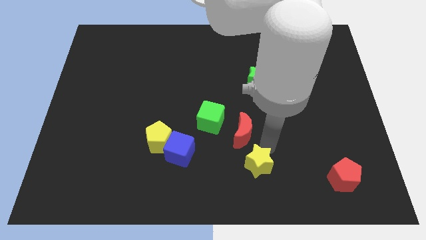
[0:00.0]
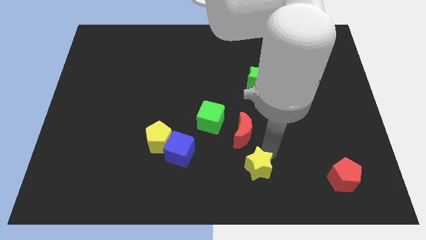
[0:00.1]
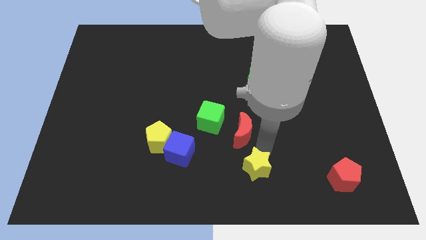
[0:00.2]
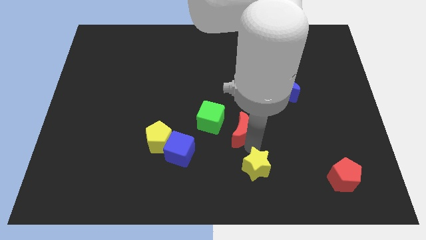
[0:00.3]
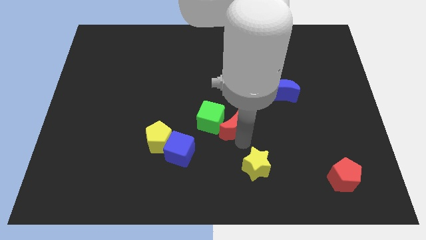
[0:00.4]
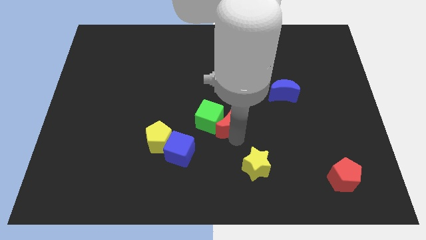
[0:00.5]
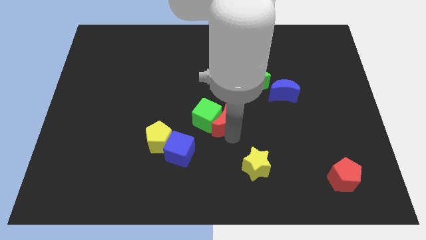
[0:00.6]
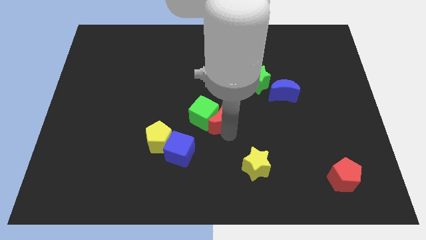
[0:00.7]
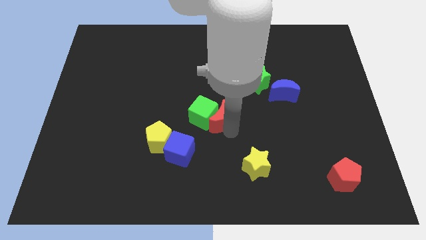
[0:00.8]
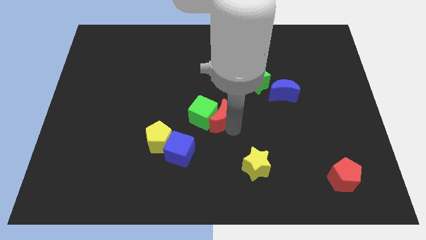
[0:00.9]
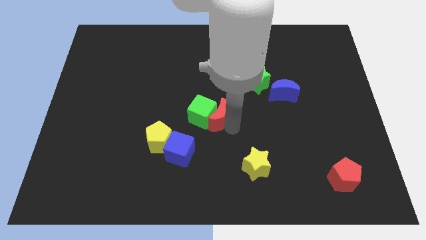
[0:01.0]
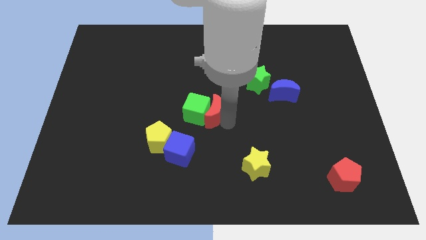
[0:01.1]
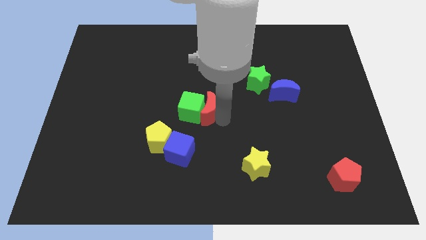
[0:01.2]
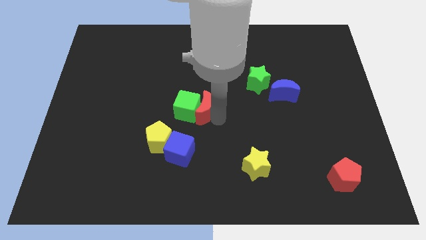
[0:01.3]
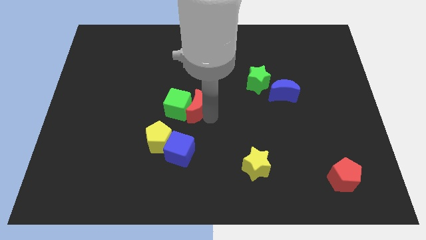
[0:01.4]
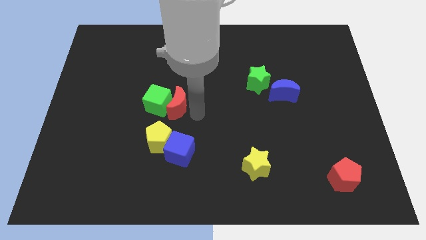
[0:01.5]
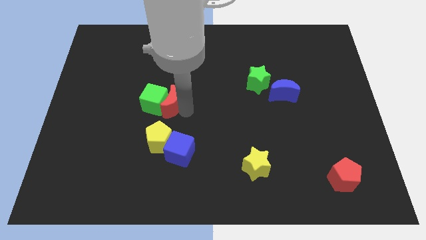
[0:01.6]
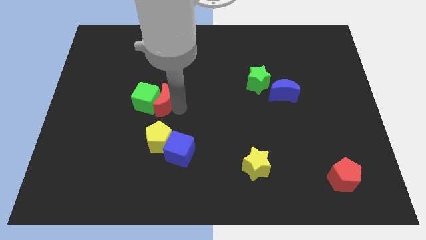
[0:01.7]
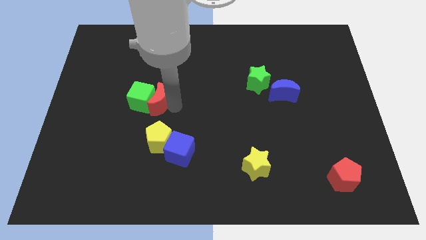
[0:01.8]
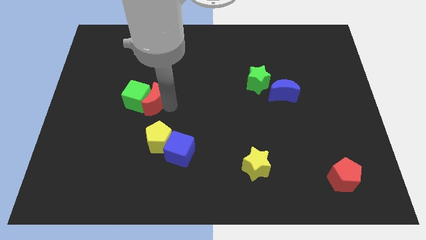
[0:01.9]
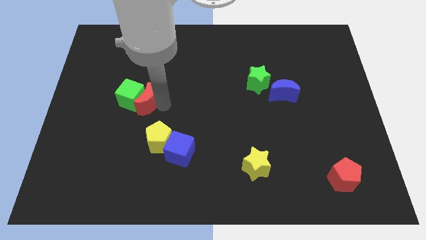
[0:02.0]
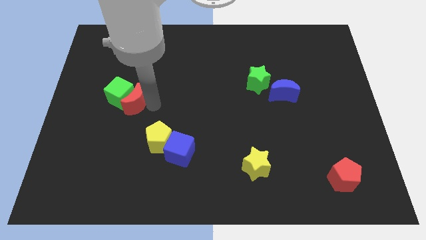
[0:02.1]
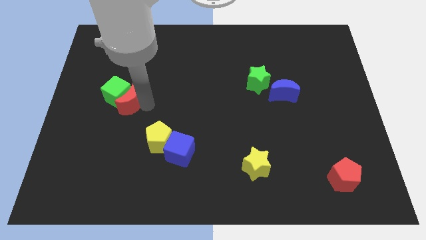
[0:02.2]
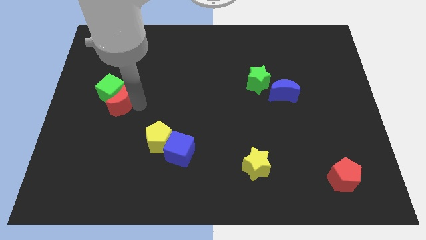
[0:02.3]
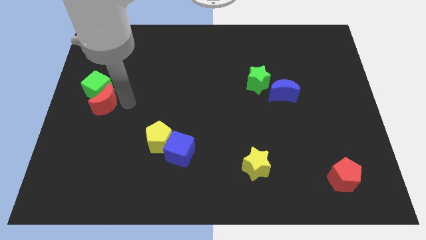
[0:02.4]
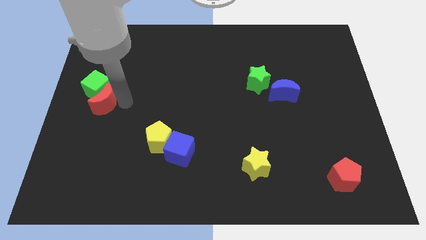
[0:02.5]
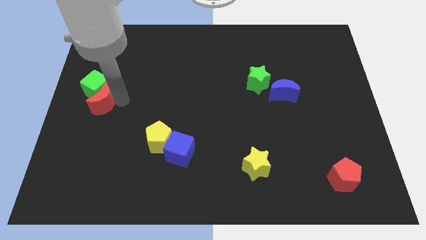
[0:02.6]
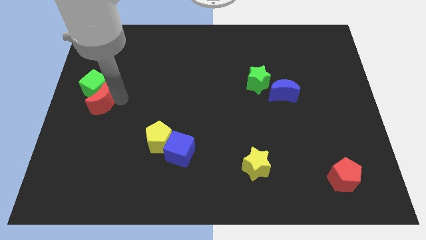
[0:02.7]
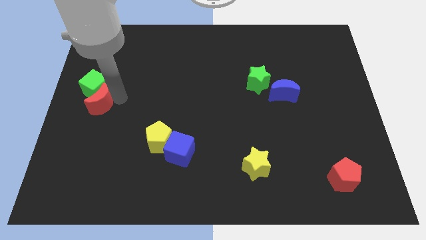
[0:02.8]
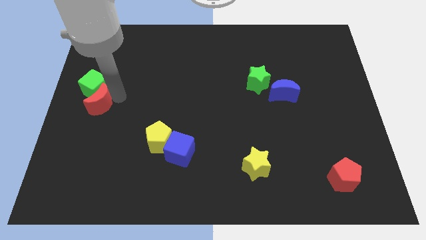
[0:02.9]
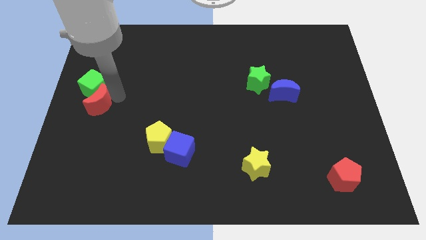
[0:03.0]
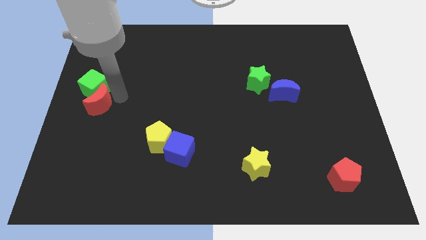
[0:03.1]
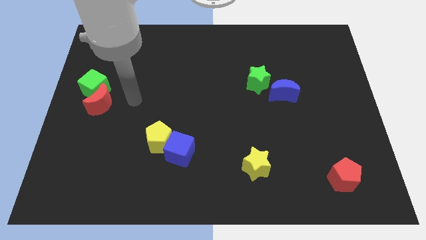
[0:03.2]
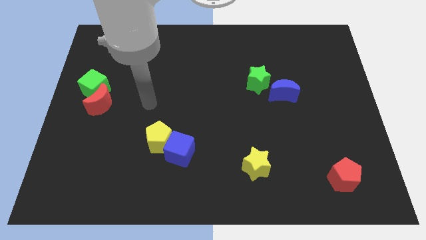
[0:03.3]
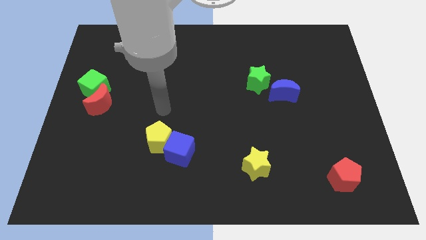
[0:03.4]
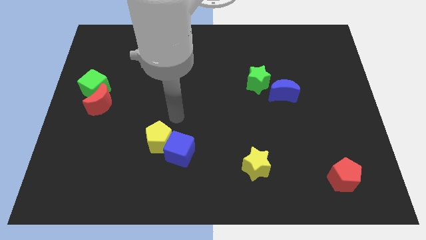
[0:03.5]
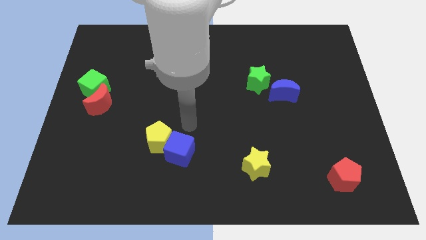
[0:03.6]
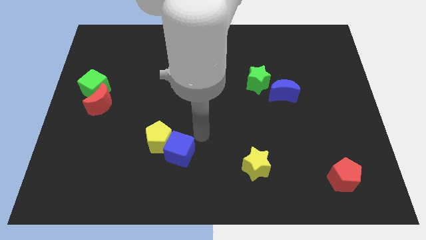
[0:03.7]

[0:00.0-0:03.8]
place red moon and green cube to the left center of the board

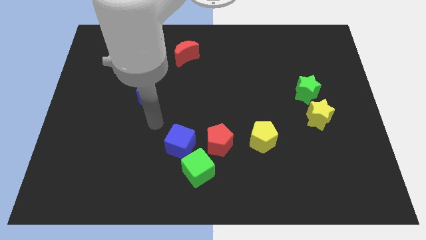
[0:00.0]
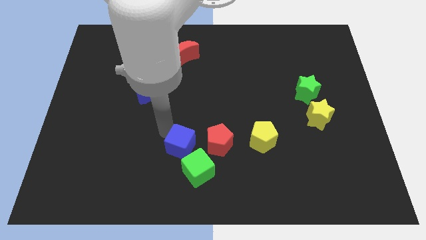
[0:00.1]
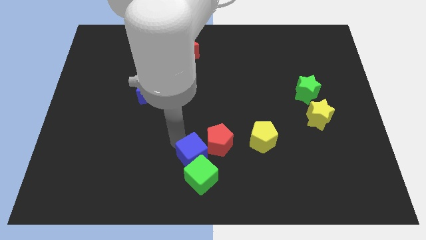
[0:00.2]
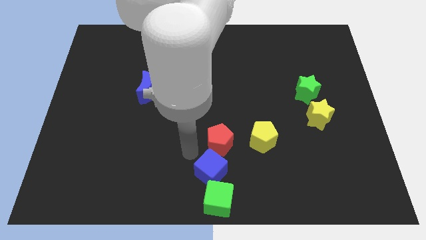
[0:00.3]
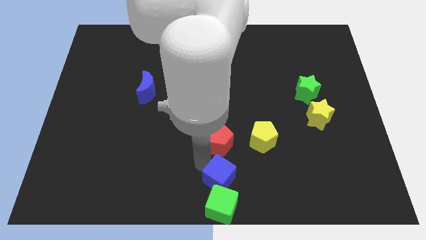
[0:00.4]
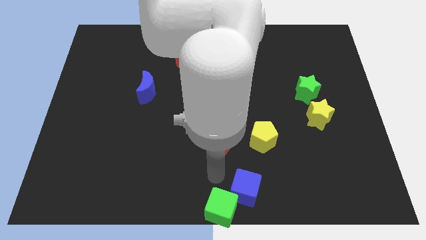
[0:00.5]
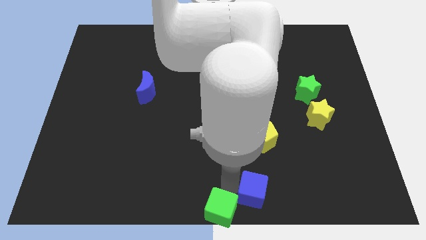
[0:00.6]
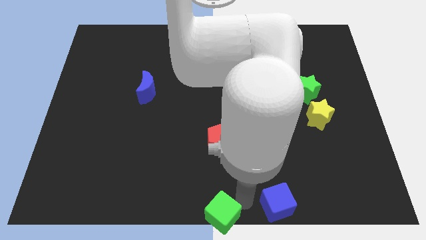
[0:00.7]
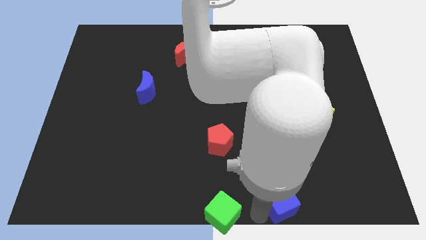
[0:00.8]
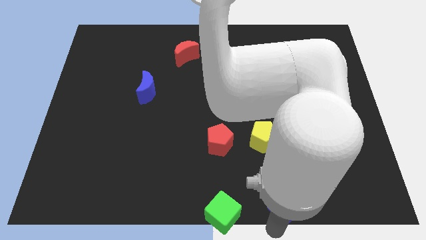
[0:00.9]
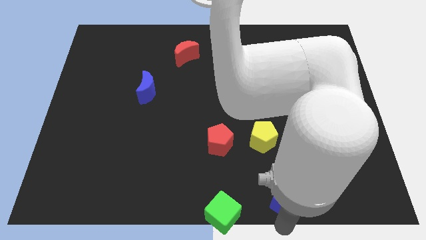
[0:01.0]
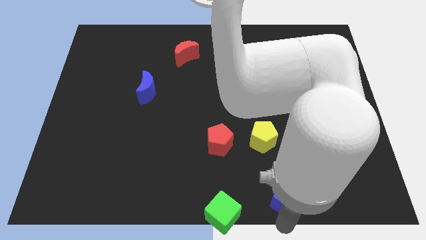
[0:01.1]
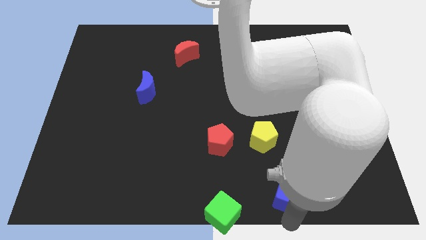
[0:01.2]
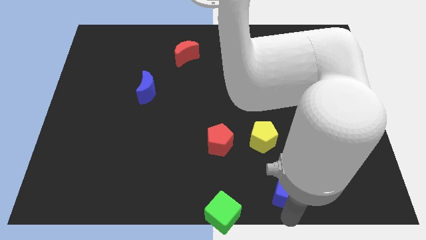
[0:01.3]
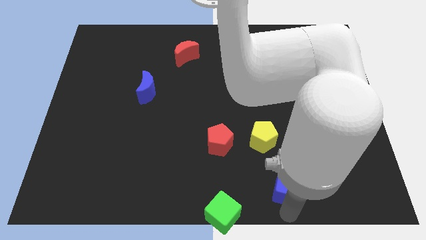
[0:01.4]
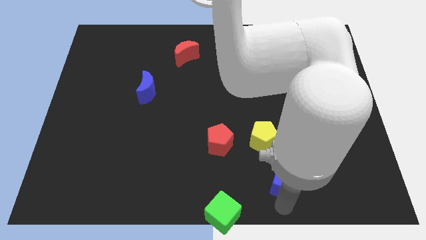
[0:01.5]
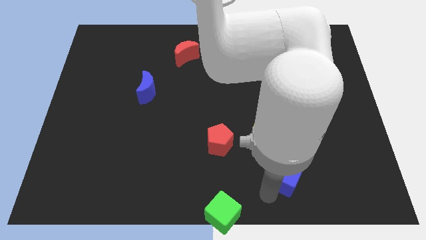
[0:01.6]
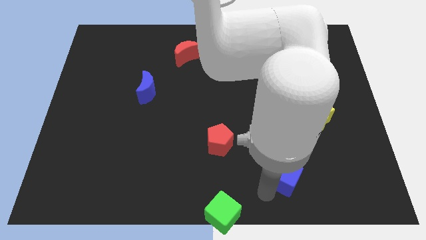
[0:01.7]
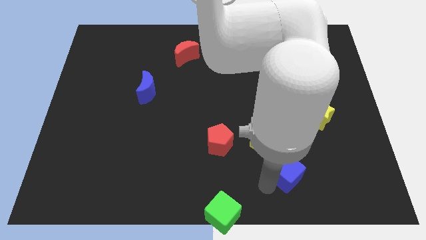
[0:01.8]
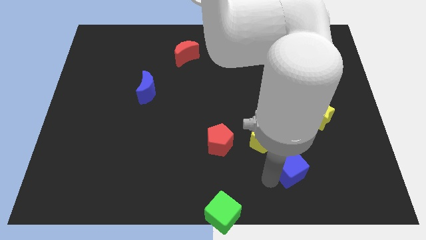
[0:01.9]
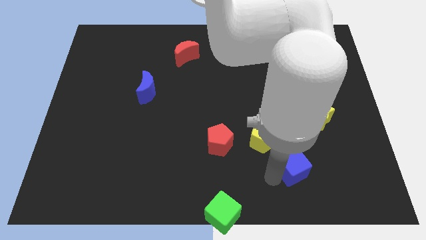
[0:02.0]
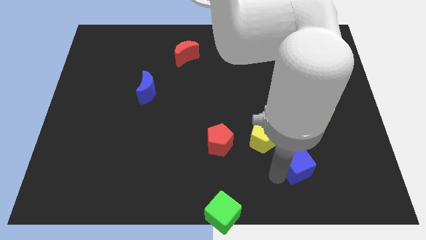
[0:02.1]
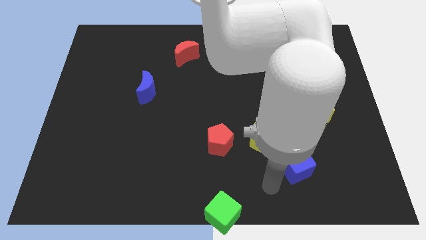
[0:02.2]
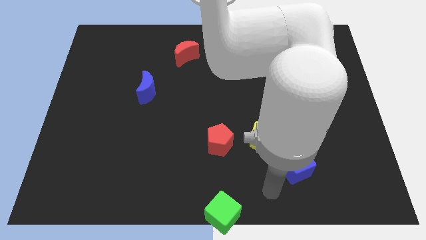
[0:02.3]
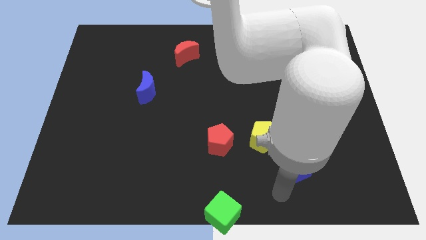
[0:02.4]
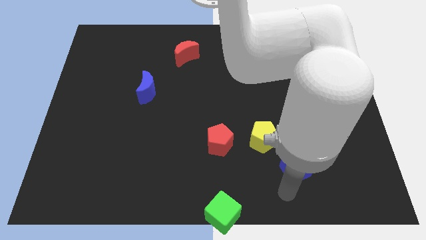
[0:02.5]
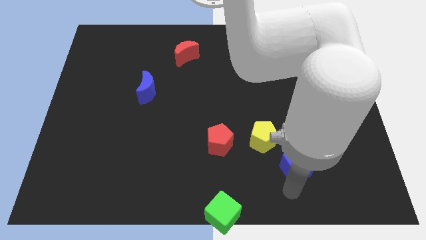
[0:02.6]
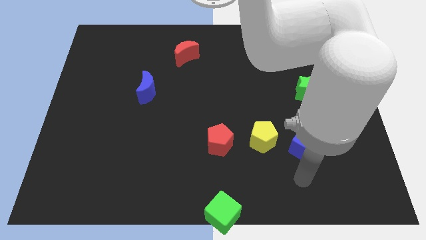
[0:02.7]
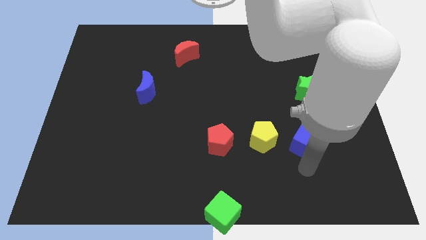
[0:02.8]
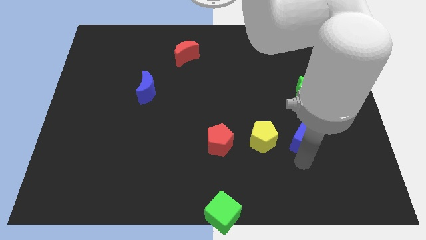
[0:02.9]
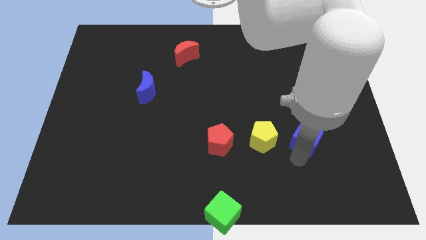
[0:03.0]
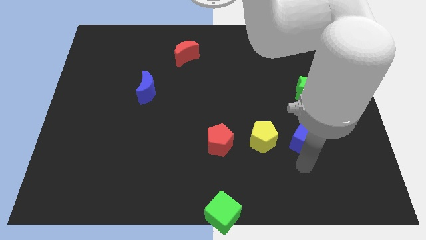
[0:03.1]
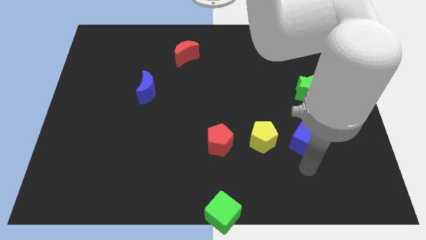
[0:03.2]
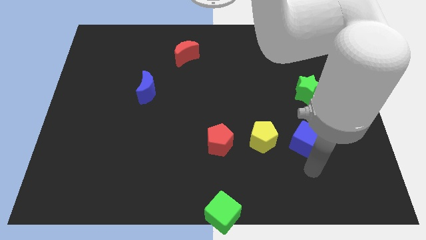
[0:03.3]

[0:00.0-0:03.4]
place the blue cube right to the yellow pentagon

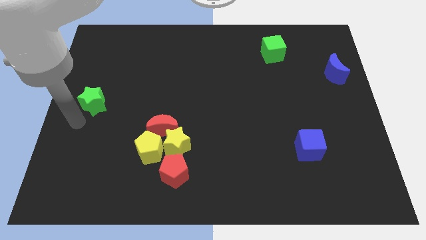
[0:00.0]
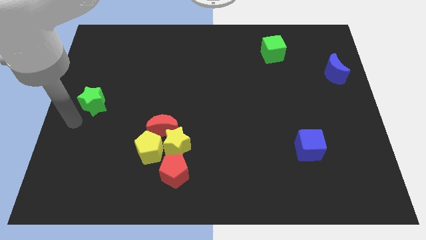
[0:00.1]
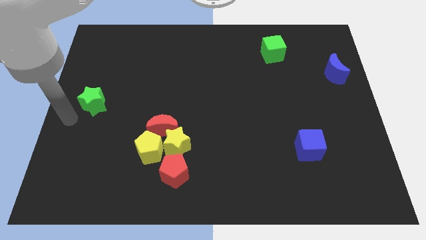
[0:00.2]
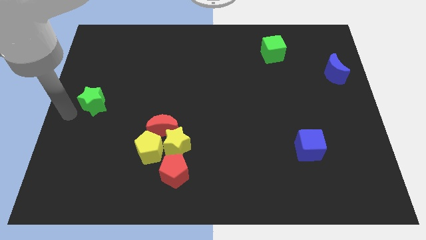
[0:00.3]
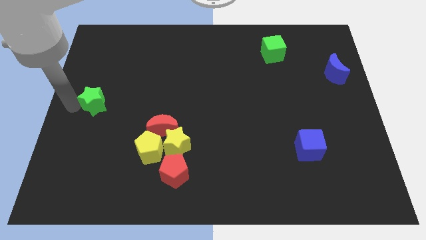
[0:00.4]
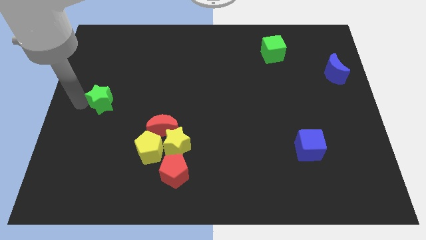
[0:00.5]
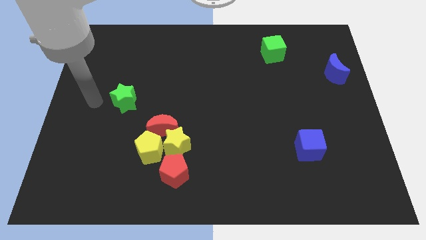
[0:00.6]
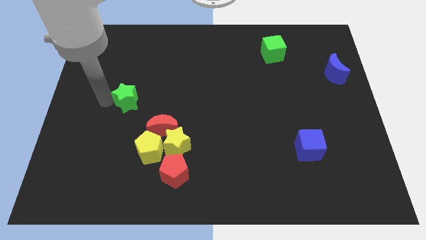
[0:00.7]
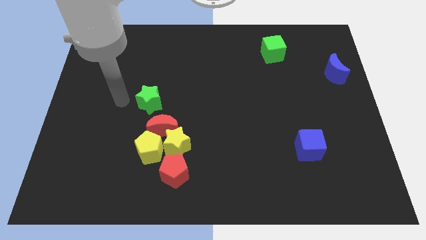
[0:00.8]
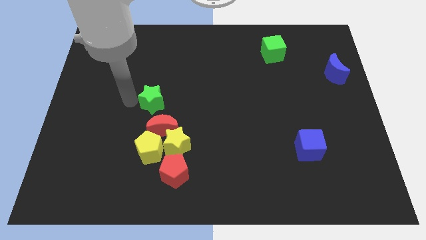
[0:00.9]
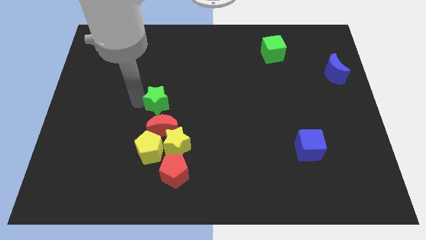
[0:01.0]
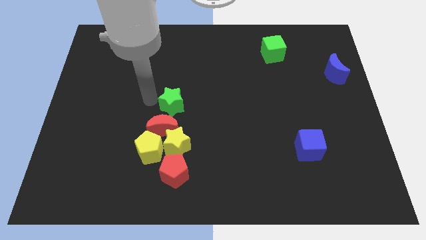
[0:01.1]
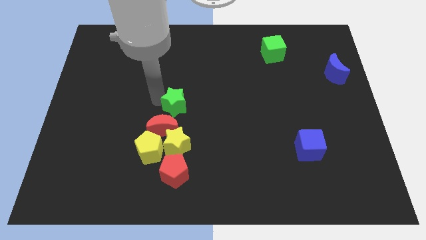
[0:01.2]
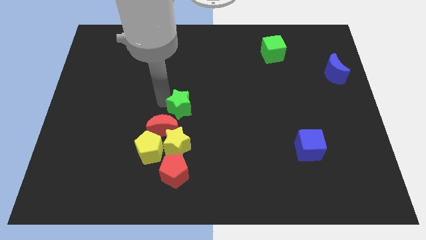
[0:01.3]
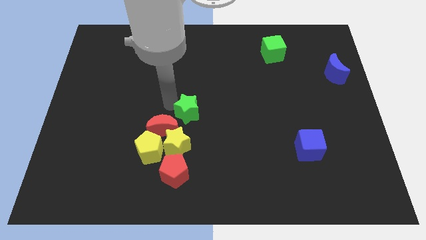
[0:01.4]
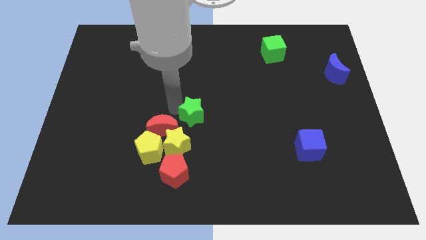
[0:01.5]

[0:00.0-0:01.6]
push green star to its right
